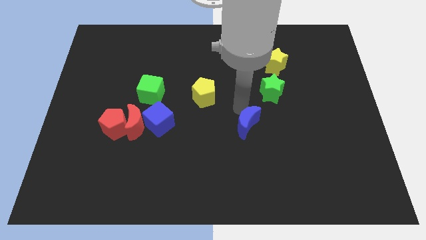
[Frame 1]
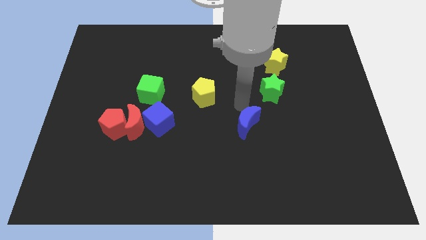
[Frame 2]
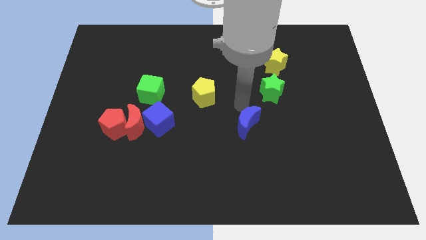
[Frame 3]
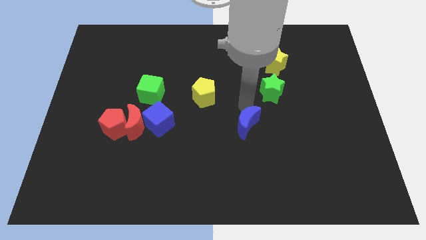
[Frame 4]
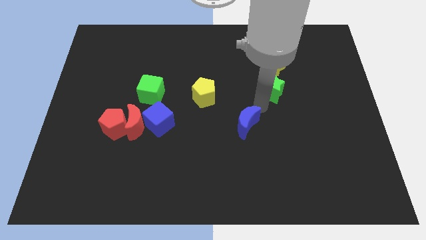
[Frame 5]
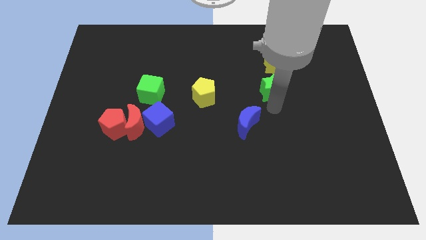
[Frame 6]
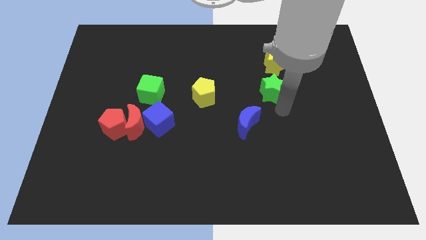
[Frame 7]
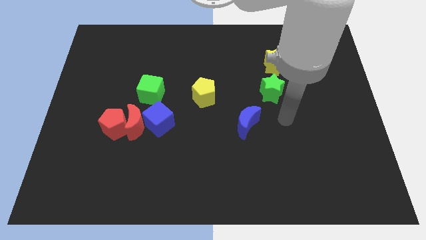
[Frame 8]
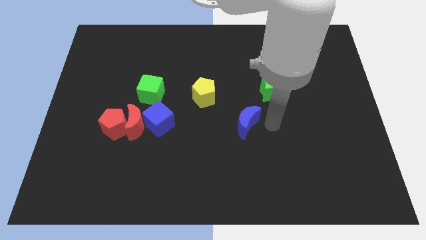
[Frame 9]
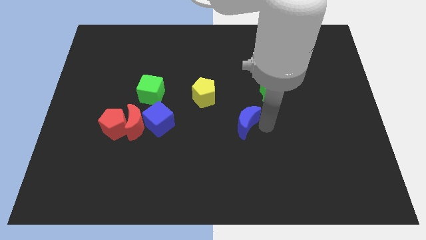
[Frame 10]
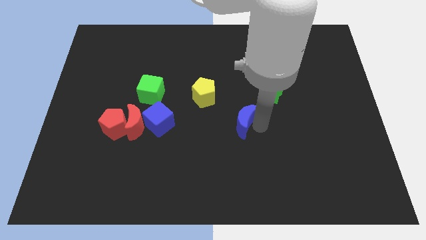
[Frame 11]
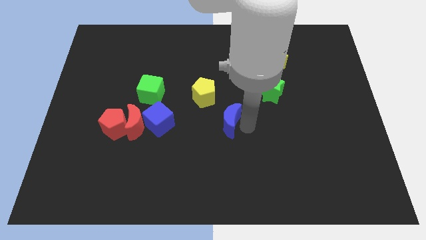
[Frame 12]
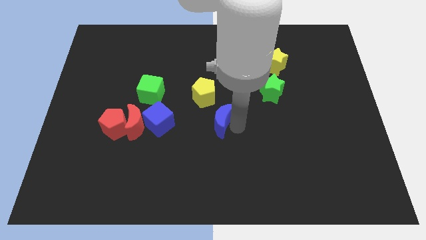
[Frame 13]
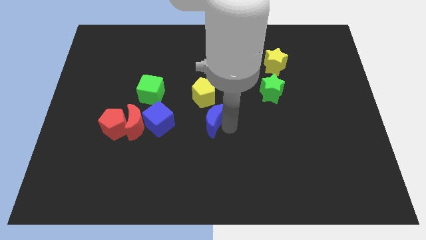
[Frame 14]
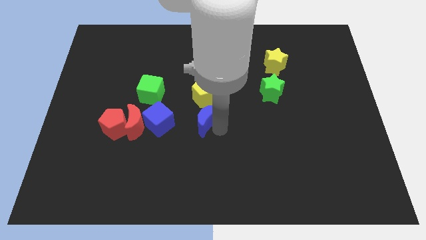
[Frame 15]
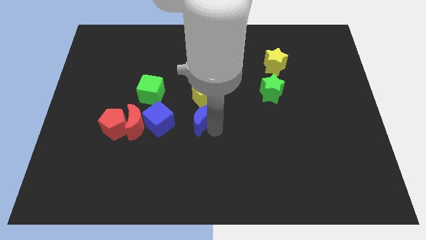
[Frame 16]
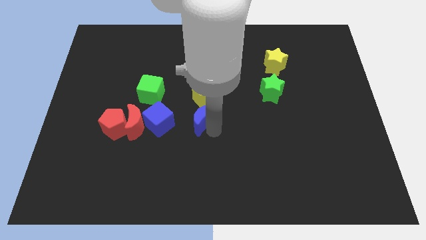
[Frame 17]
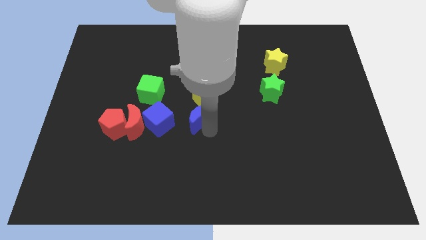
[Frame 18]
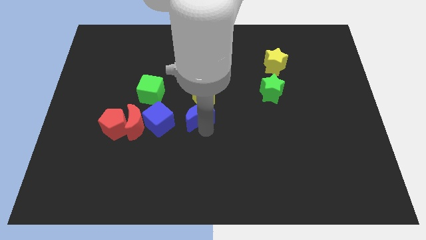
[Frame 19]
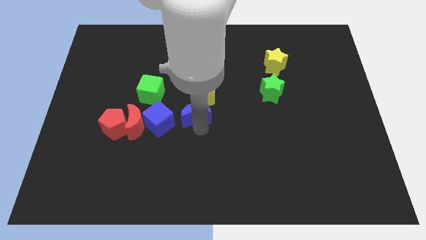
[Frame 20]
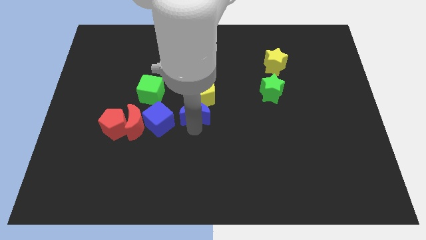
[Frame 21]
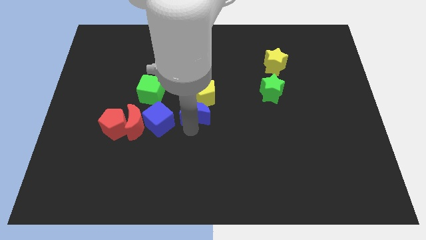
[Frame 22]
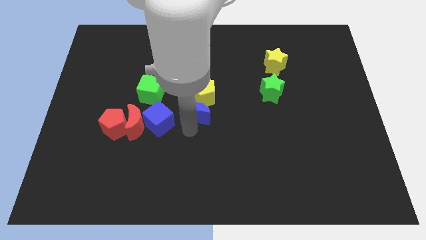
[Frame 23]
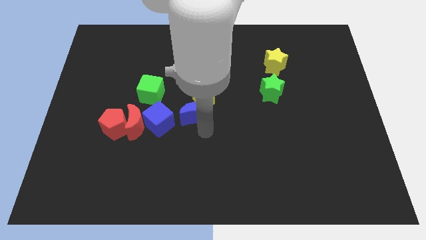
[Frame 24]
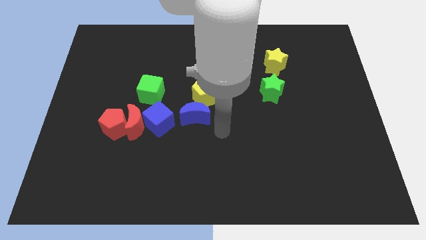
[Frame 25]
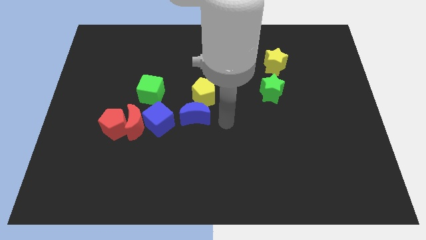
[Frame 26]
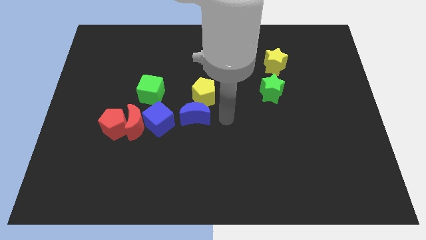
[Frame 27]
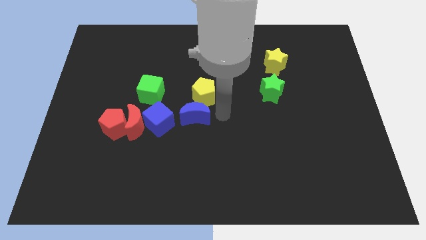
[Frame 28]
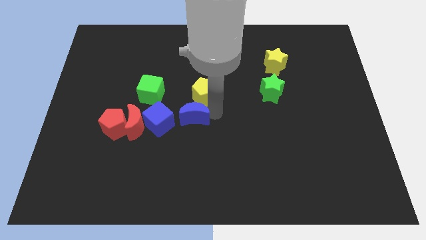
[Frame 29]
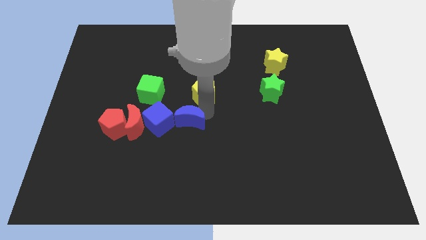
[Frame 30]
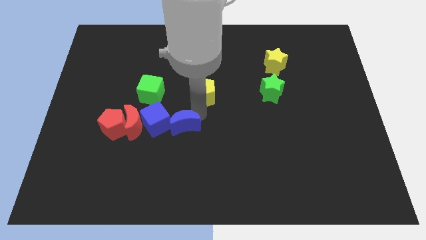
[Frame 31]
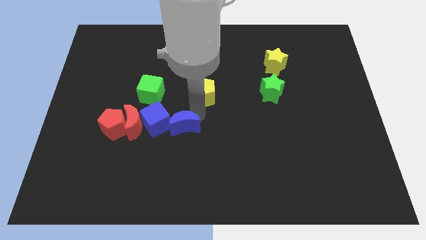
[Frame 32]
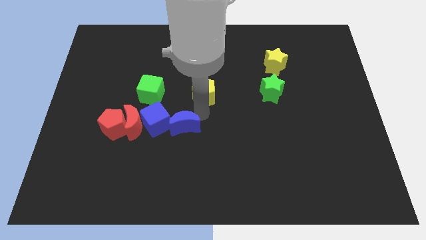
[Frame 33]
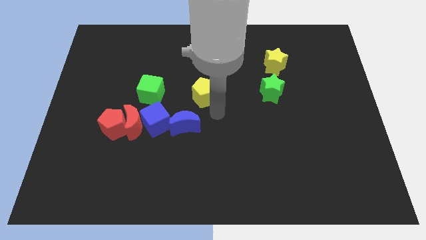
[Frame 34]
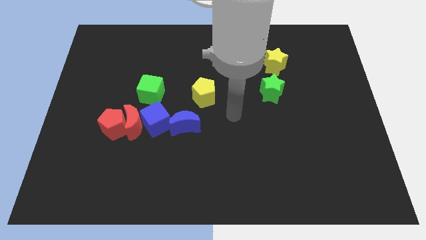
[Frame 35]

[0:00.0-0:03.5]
move the blue crescent into the blue cube

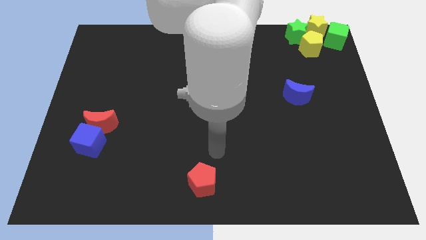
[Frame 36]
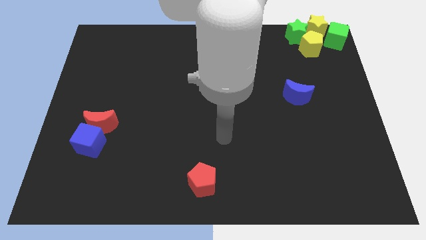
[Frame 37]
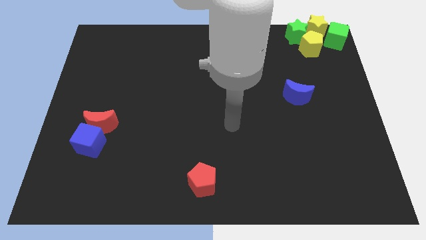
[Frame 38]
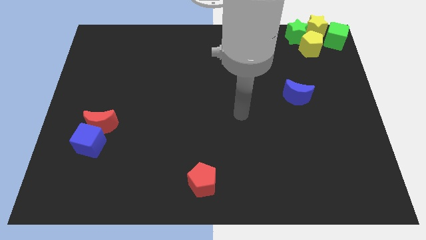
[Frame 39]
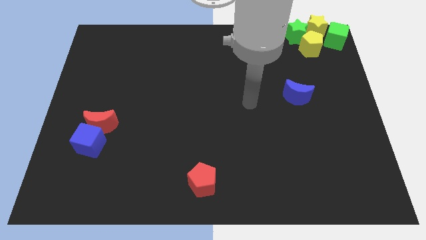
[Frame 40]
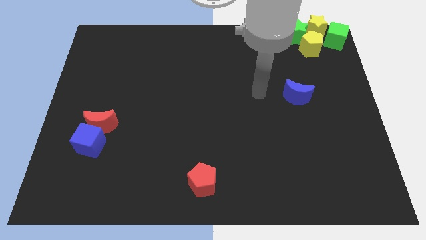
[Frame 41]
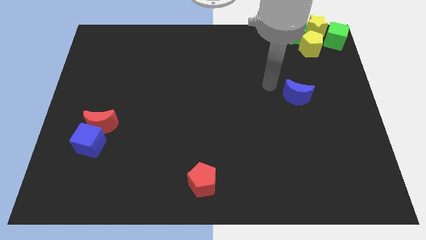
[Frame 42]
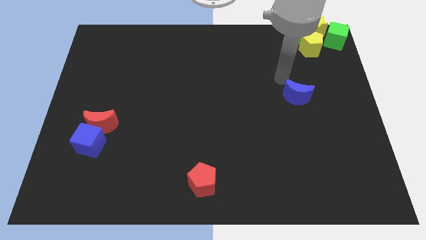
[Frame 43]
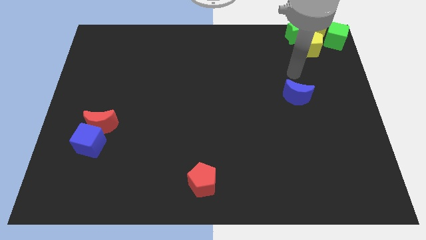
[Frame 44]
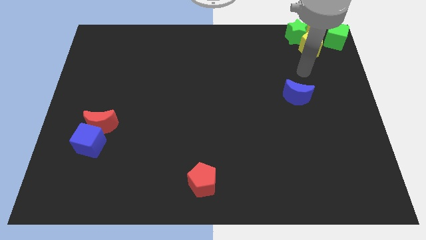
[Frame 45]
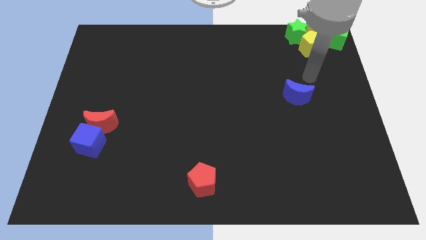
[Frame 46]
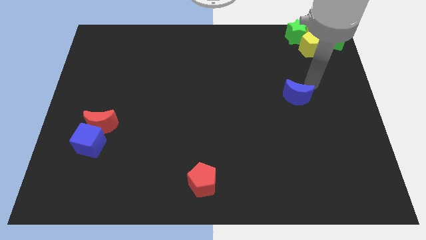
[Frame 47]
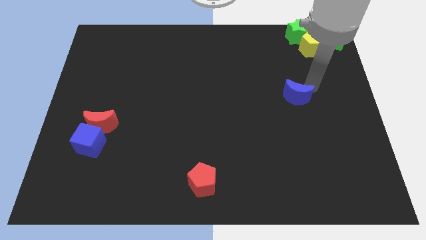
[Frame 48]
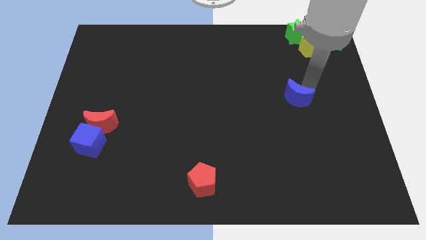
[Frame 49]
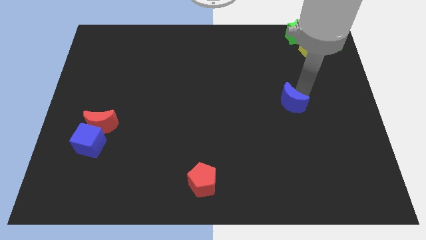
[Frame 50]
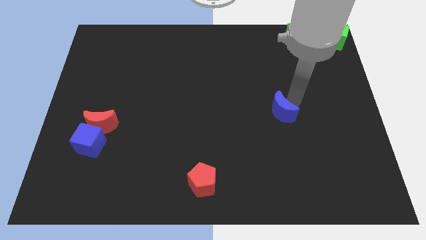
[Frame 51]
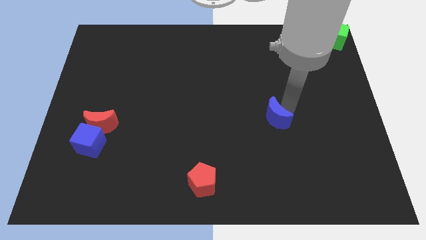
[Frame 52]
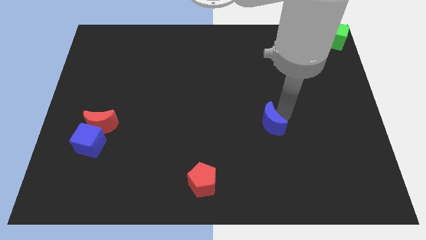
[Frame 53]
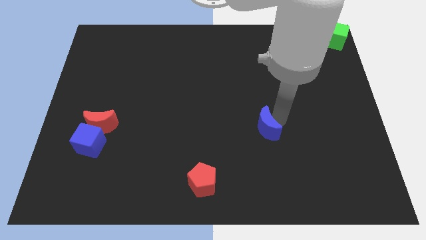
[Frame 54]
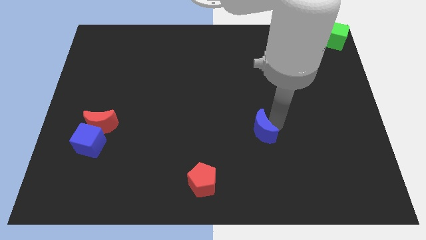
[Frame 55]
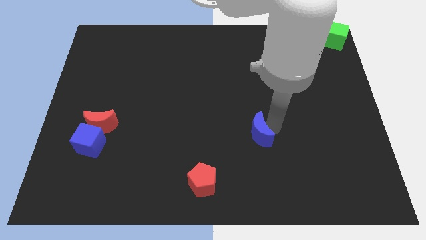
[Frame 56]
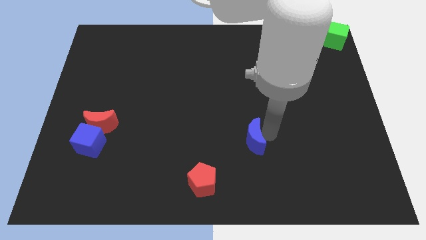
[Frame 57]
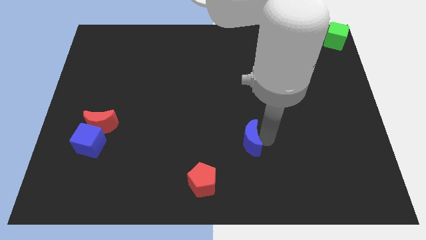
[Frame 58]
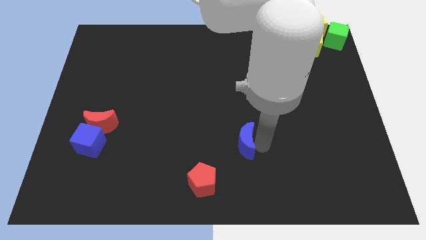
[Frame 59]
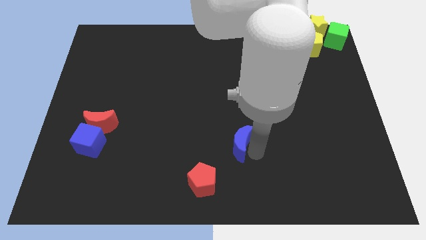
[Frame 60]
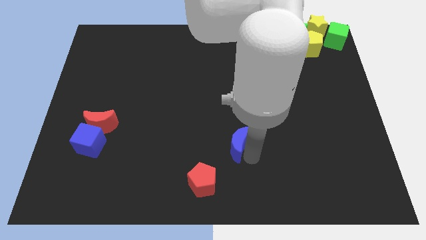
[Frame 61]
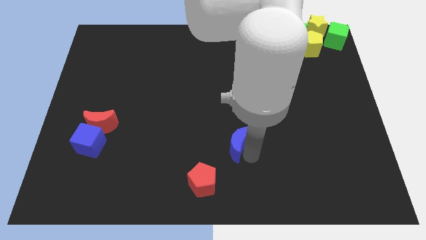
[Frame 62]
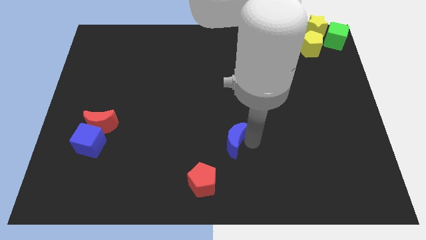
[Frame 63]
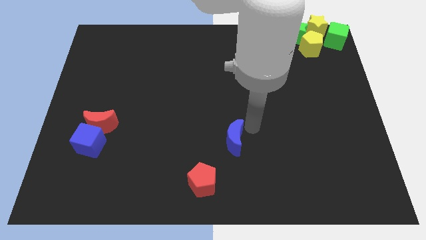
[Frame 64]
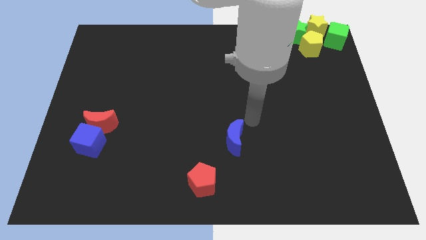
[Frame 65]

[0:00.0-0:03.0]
put the blue crescent parallel to the blue cube

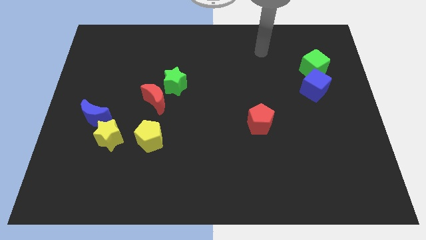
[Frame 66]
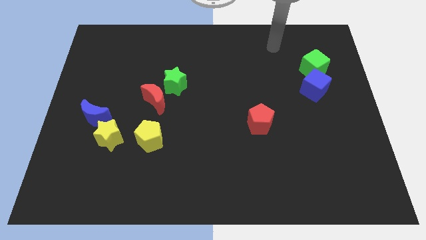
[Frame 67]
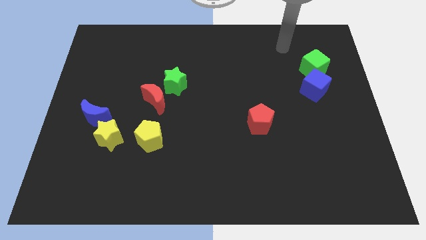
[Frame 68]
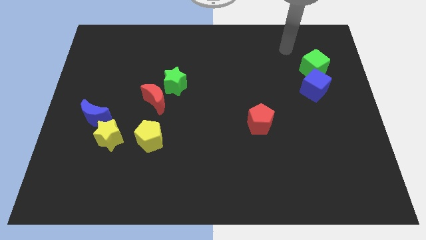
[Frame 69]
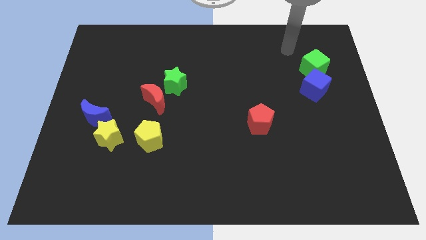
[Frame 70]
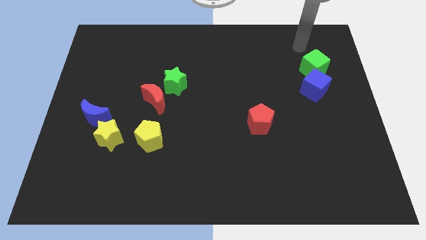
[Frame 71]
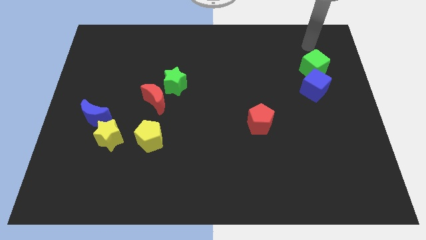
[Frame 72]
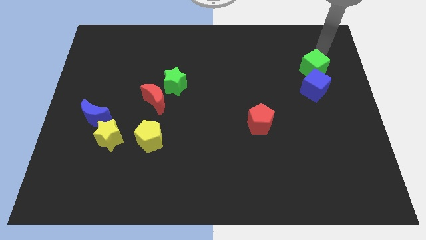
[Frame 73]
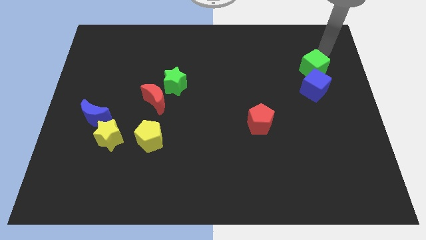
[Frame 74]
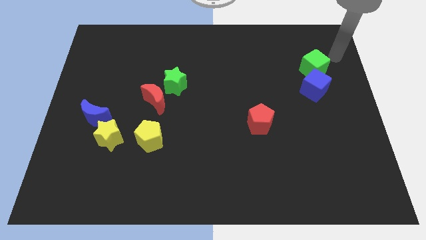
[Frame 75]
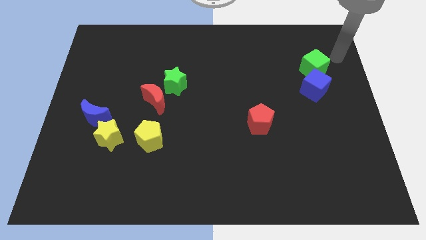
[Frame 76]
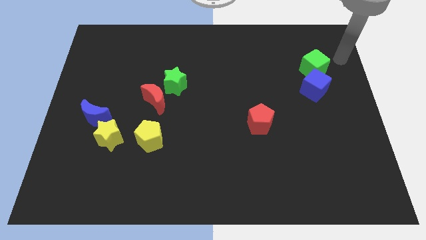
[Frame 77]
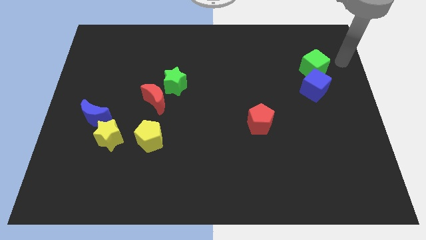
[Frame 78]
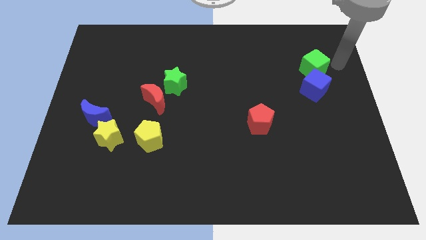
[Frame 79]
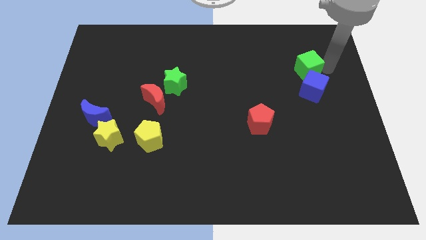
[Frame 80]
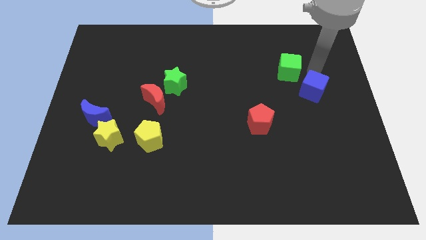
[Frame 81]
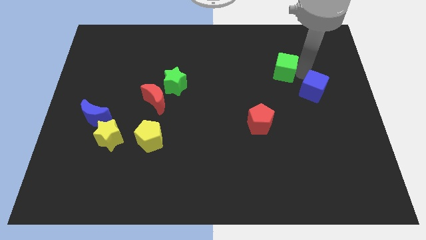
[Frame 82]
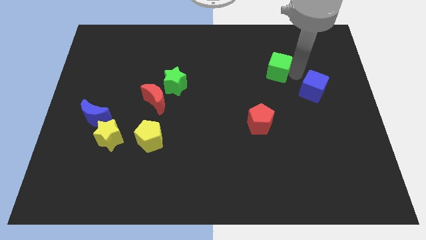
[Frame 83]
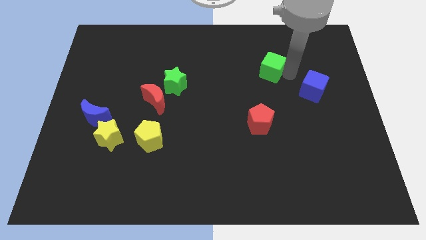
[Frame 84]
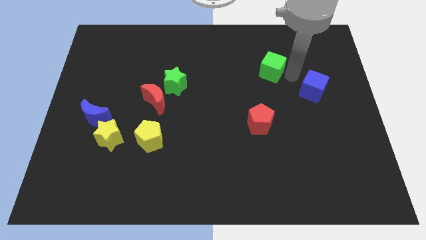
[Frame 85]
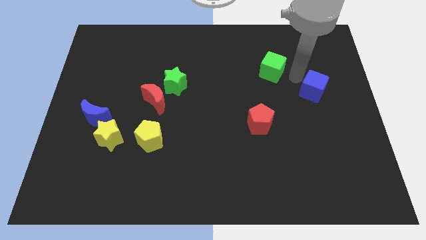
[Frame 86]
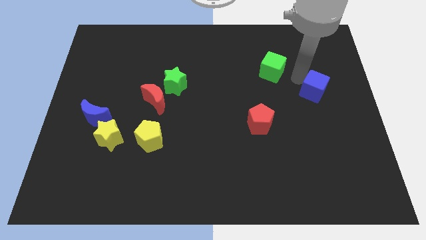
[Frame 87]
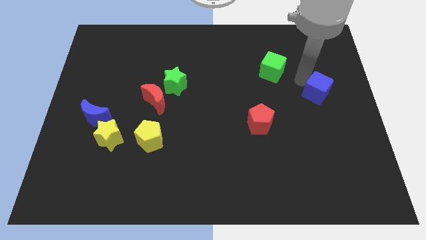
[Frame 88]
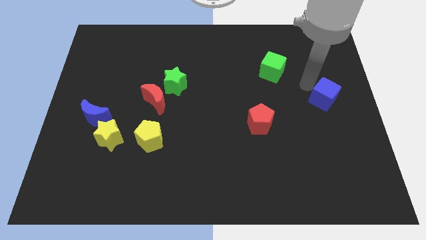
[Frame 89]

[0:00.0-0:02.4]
slightly move the green cube to the left

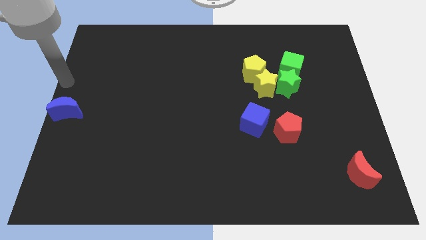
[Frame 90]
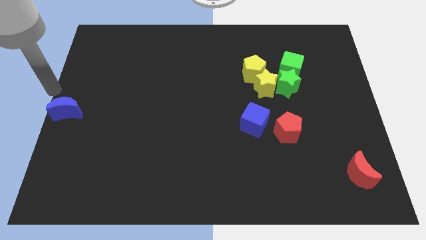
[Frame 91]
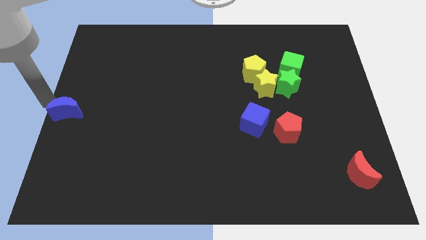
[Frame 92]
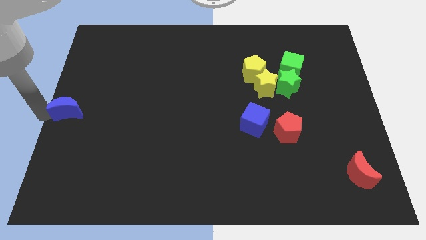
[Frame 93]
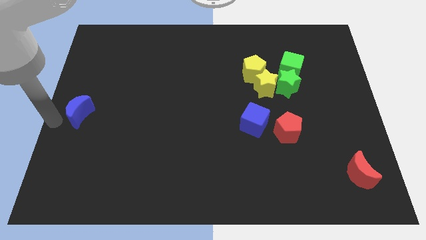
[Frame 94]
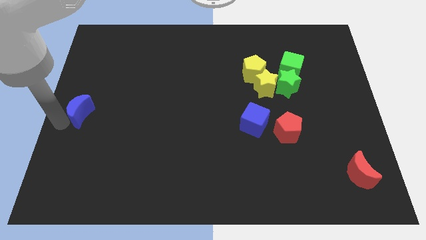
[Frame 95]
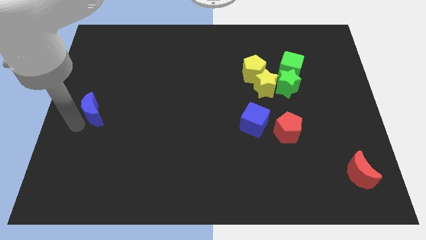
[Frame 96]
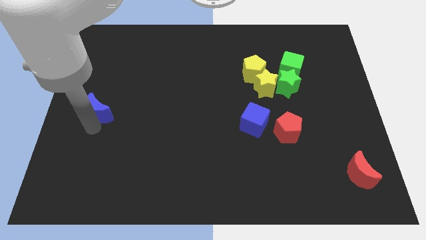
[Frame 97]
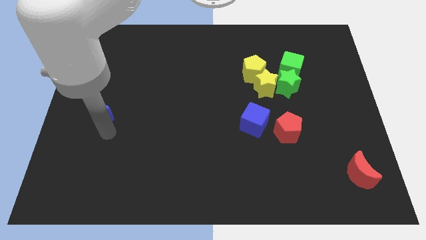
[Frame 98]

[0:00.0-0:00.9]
move blue crescent towards its right
